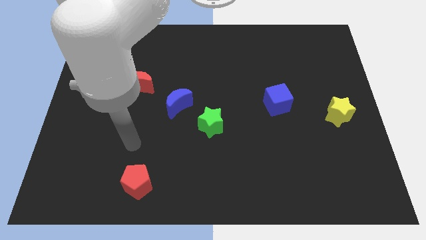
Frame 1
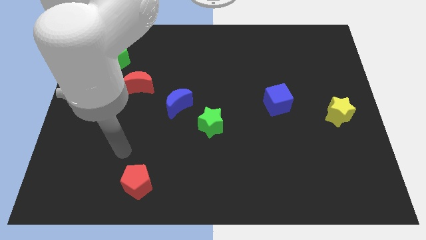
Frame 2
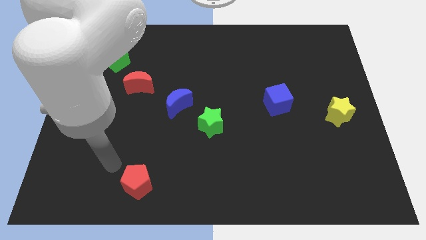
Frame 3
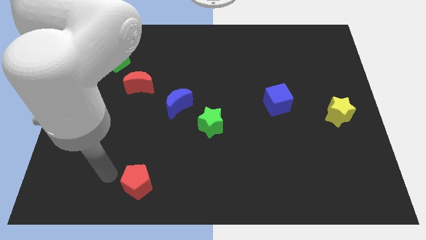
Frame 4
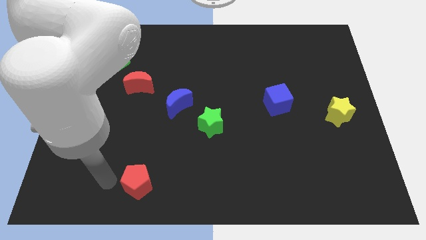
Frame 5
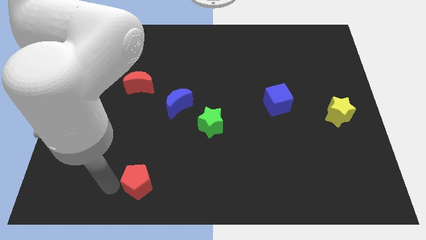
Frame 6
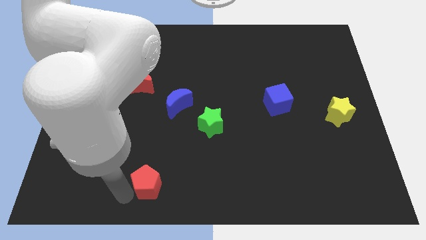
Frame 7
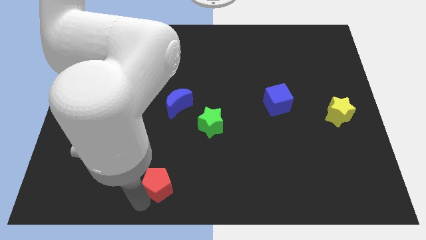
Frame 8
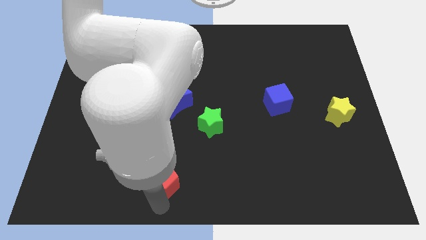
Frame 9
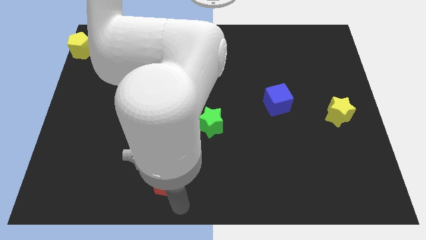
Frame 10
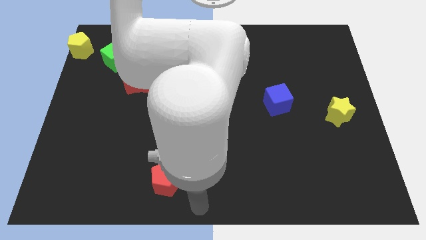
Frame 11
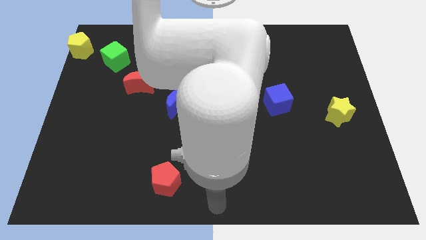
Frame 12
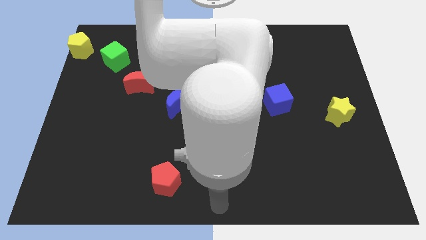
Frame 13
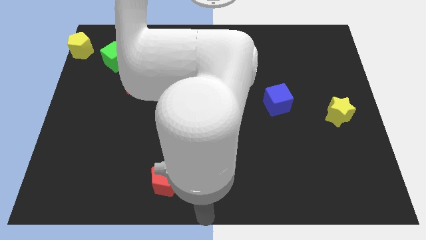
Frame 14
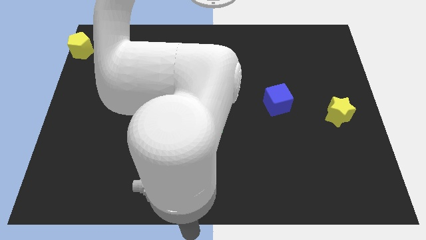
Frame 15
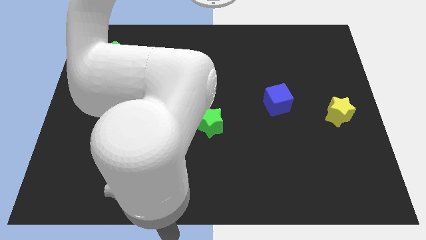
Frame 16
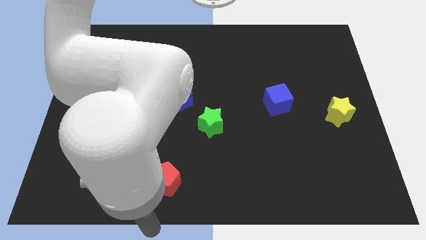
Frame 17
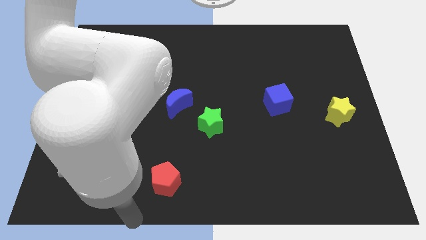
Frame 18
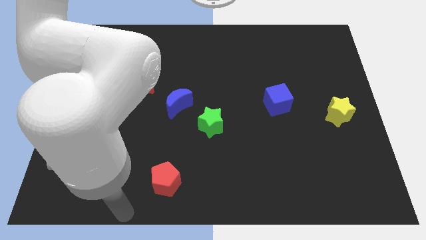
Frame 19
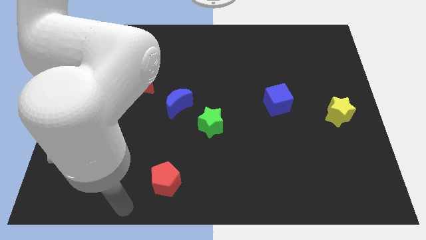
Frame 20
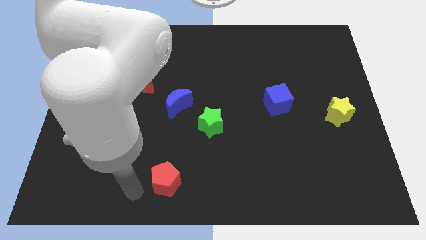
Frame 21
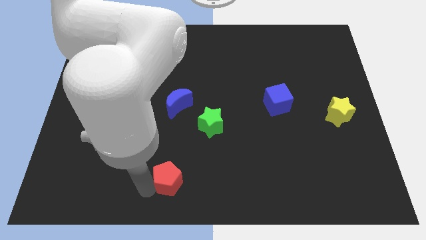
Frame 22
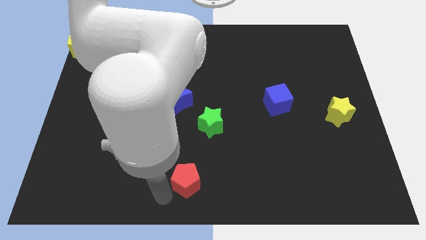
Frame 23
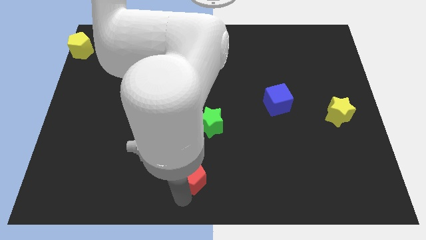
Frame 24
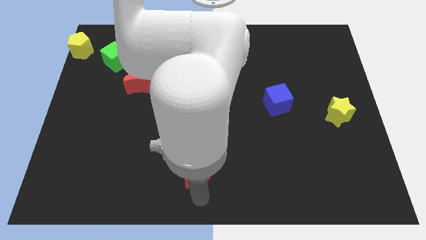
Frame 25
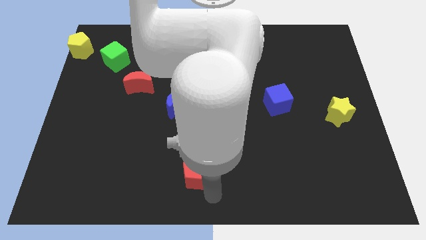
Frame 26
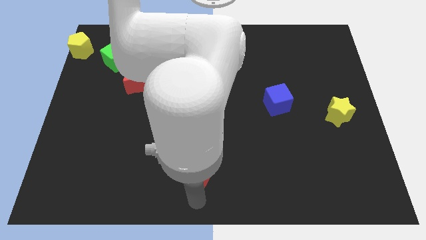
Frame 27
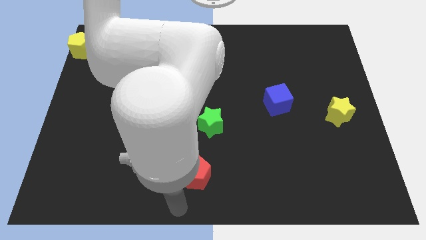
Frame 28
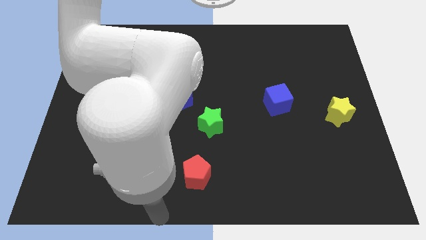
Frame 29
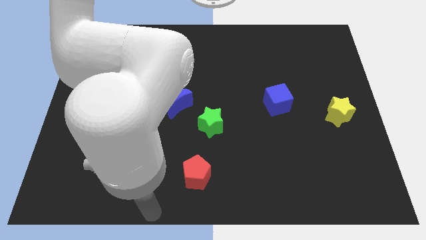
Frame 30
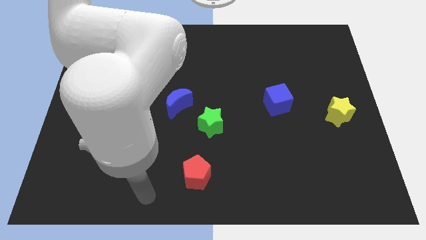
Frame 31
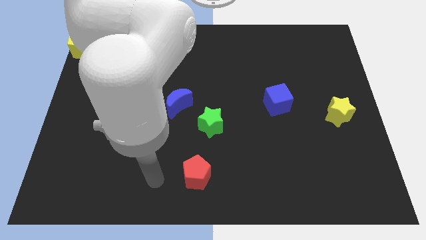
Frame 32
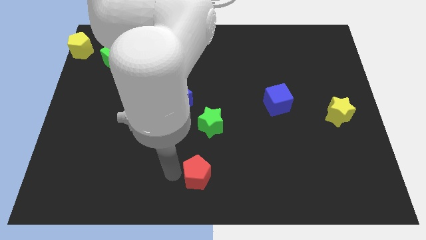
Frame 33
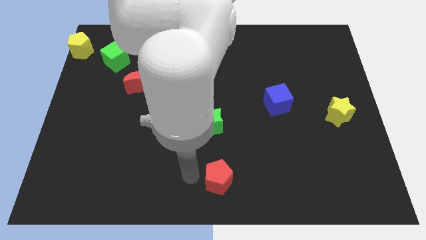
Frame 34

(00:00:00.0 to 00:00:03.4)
put the red pentagon to the bottom center of the board

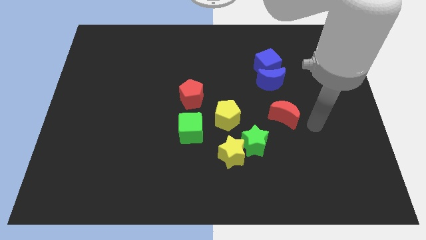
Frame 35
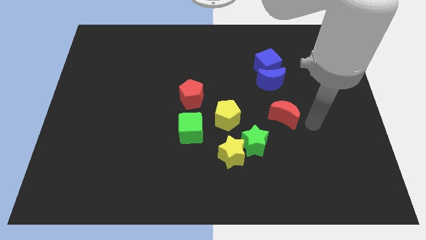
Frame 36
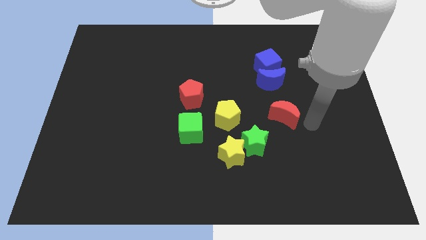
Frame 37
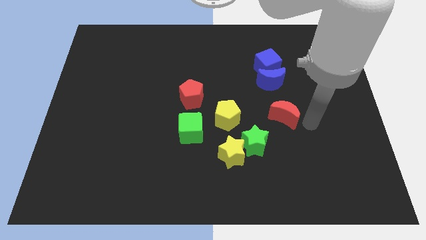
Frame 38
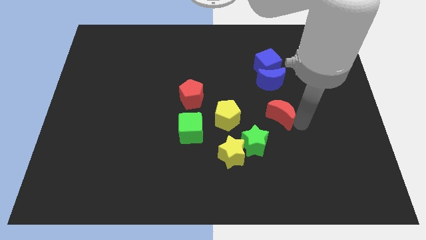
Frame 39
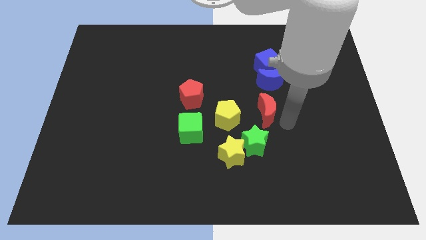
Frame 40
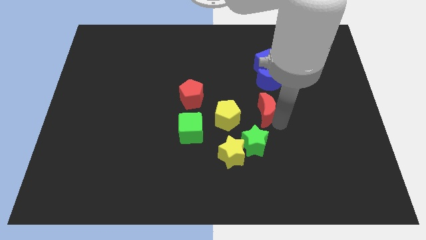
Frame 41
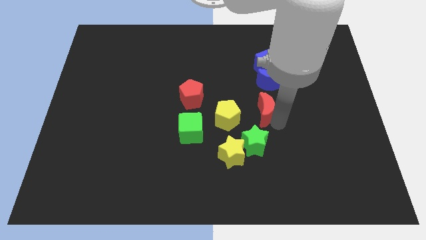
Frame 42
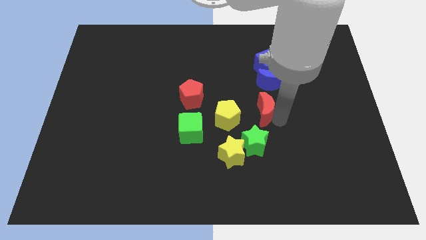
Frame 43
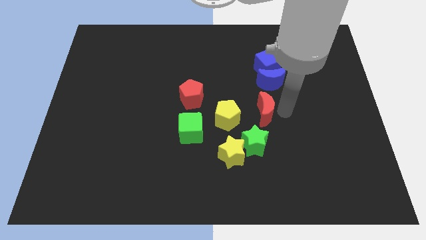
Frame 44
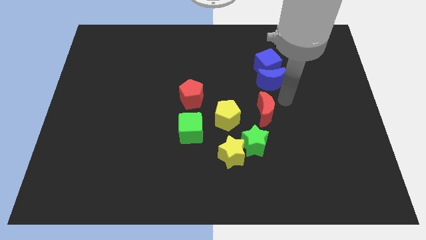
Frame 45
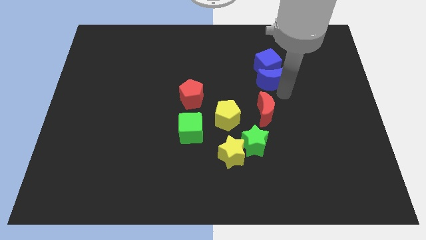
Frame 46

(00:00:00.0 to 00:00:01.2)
place red moon in between blue moon and green star

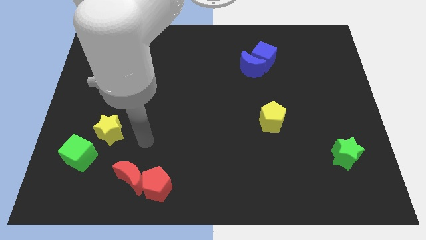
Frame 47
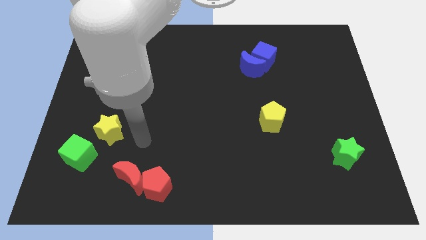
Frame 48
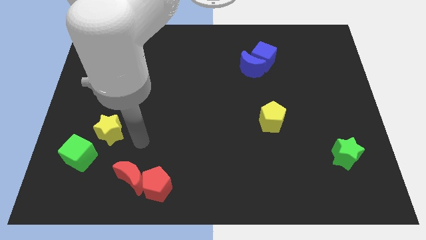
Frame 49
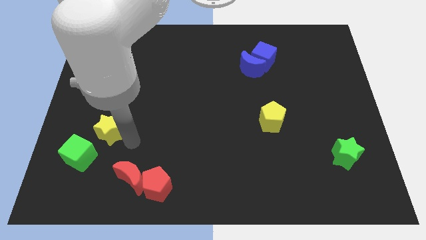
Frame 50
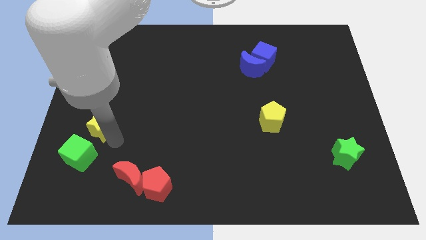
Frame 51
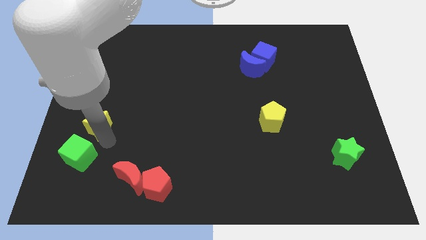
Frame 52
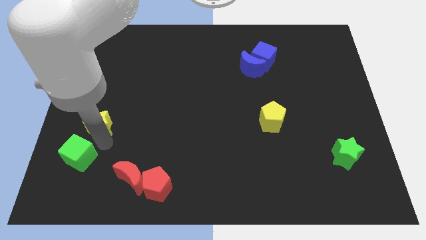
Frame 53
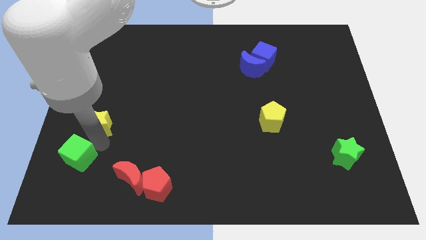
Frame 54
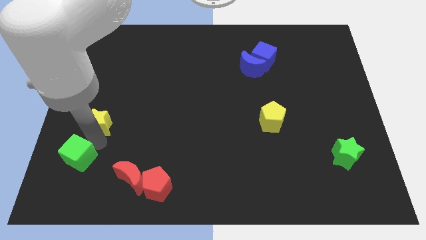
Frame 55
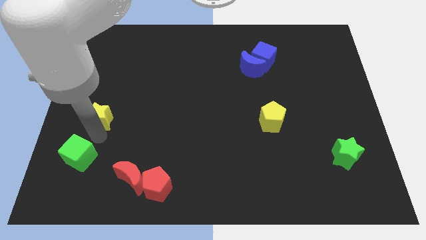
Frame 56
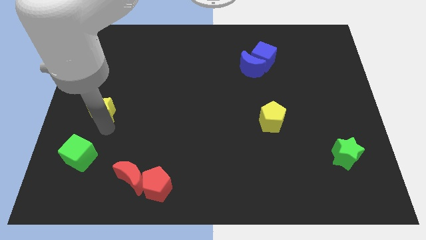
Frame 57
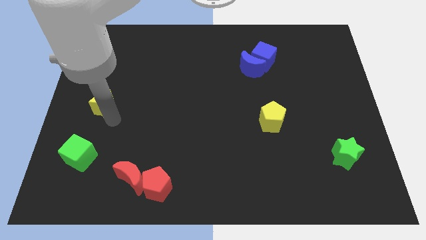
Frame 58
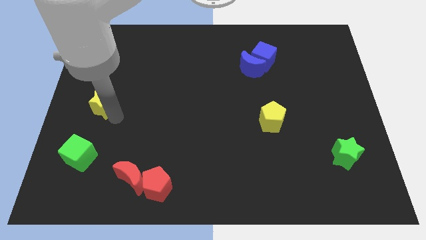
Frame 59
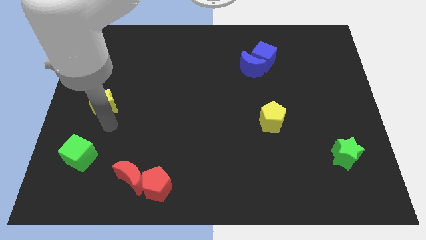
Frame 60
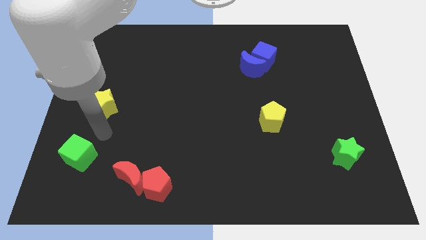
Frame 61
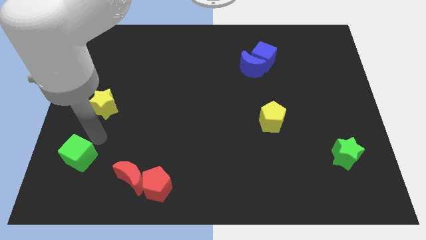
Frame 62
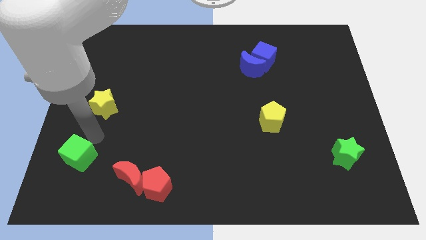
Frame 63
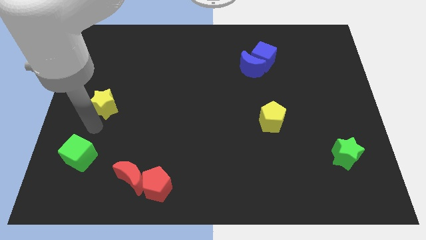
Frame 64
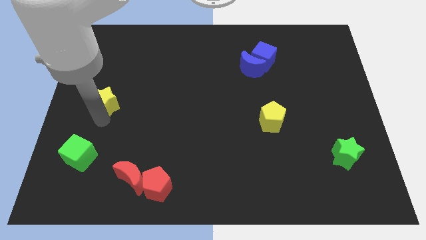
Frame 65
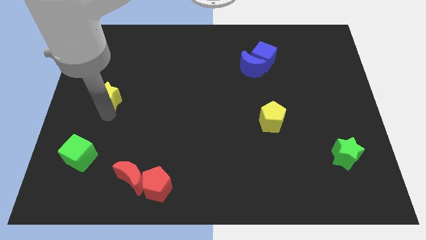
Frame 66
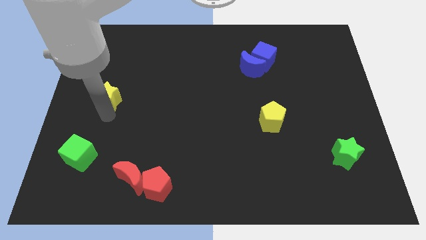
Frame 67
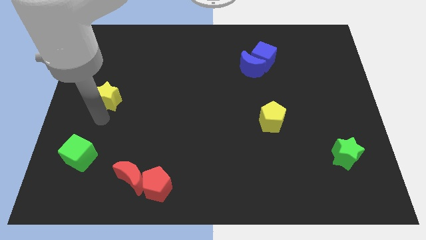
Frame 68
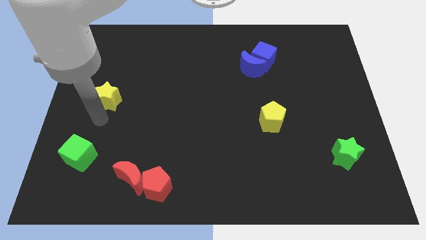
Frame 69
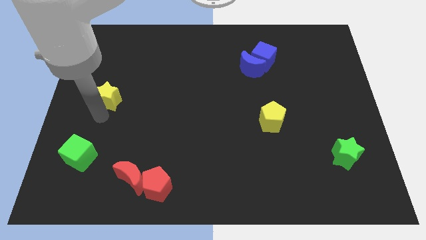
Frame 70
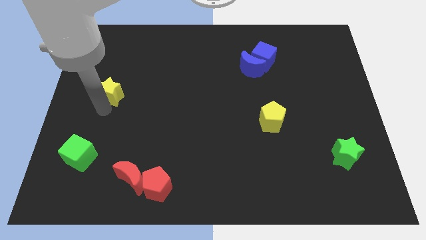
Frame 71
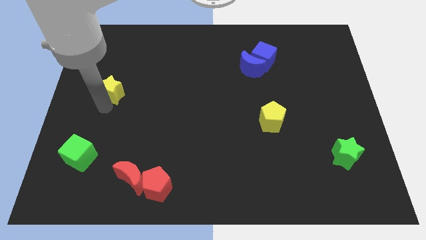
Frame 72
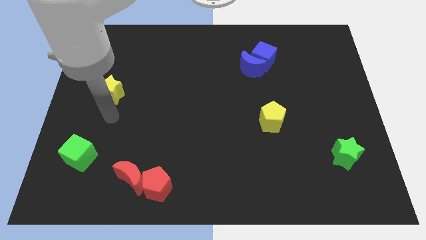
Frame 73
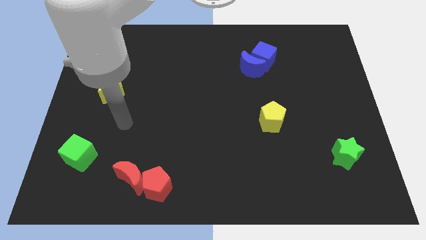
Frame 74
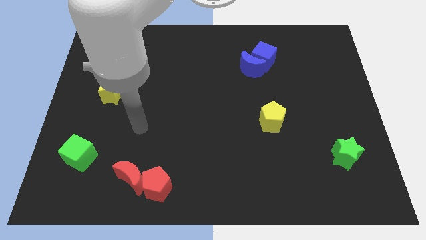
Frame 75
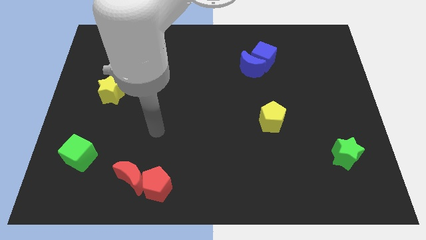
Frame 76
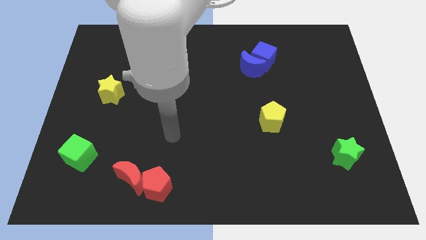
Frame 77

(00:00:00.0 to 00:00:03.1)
push the yellow star slightly to the top

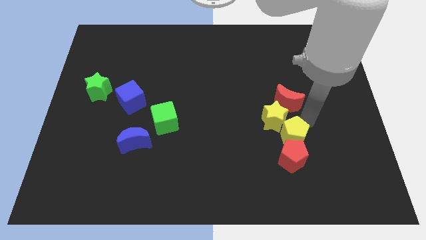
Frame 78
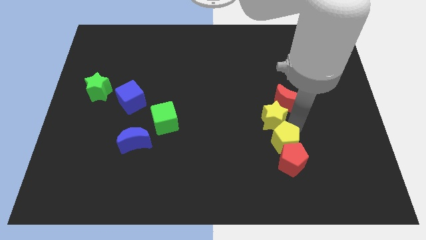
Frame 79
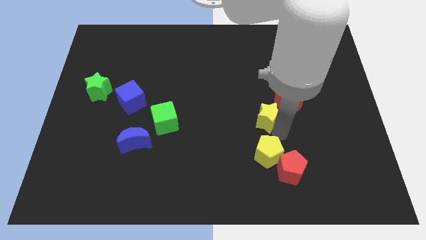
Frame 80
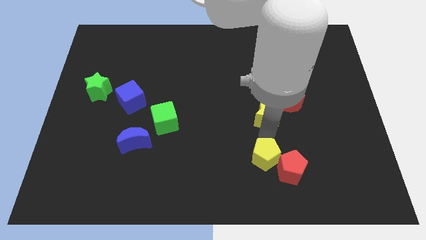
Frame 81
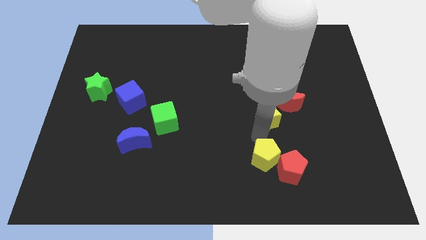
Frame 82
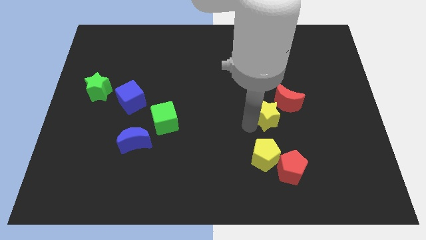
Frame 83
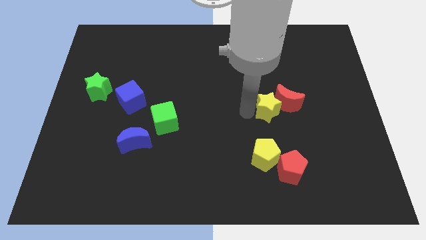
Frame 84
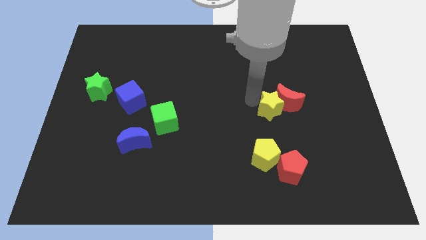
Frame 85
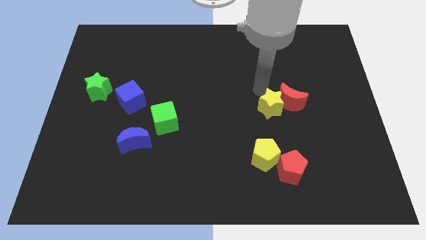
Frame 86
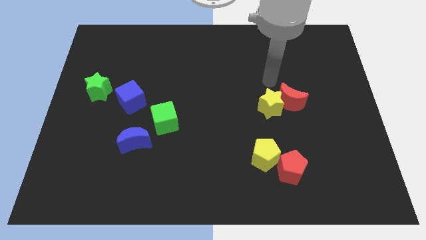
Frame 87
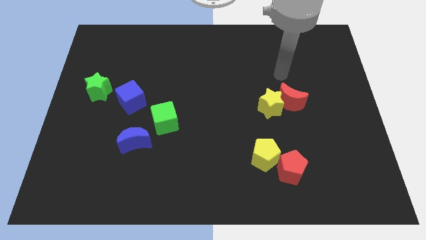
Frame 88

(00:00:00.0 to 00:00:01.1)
separate yellow blocks
